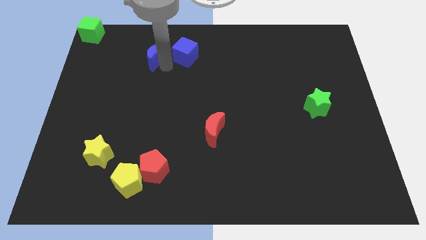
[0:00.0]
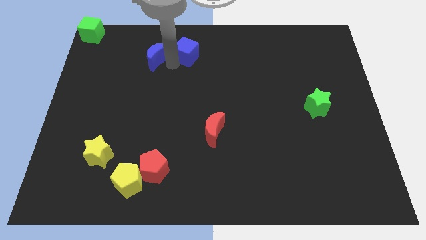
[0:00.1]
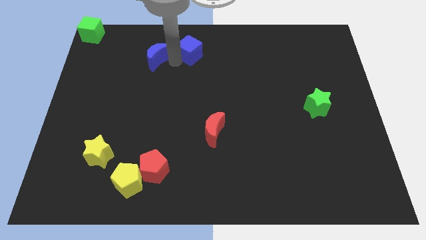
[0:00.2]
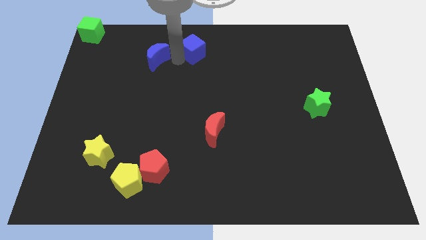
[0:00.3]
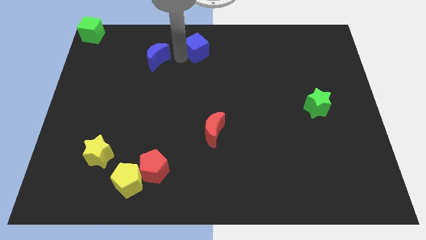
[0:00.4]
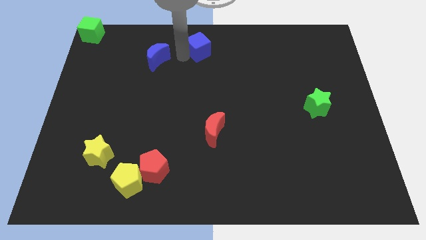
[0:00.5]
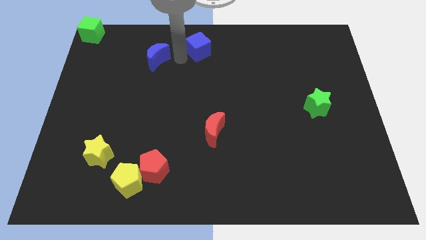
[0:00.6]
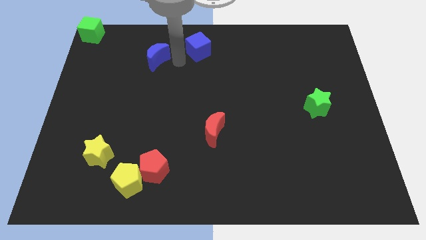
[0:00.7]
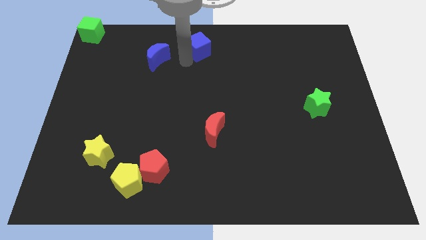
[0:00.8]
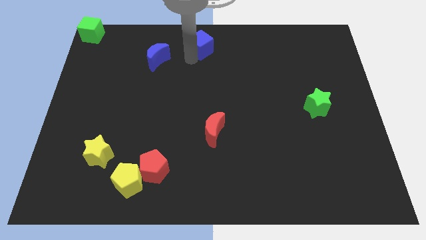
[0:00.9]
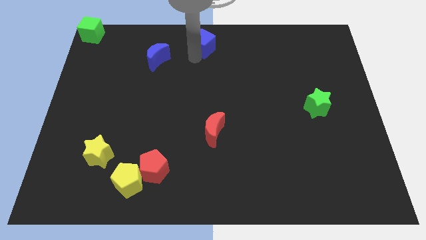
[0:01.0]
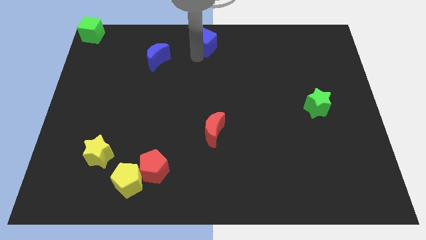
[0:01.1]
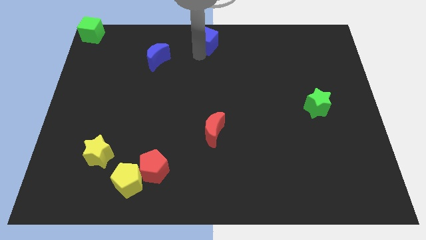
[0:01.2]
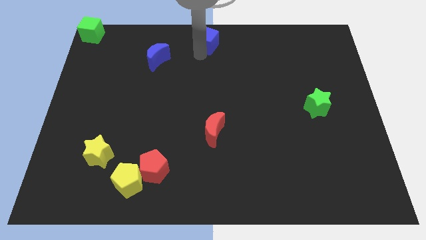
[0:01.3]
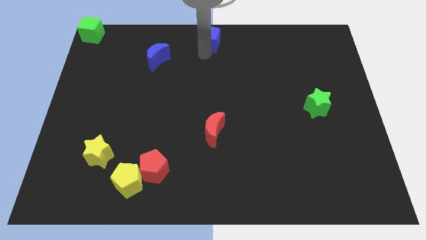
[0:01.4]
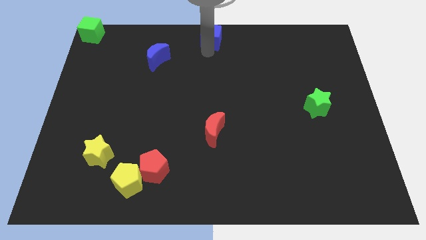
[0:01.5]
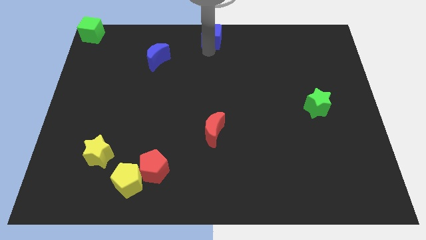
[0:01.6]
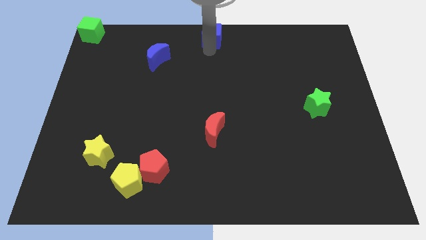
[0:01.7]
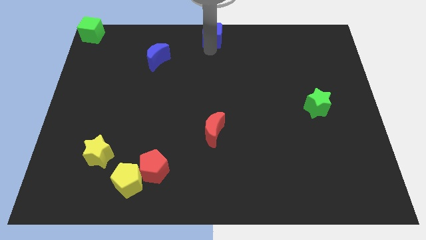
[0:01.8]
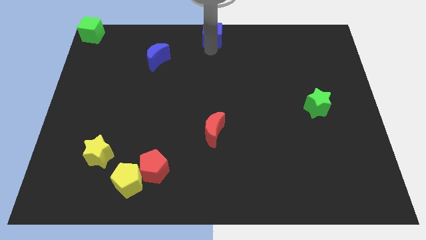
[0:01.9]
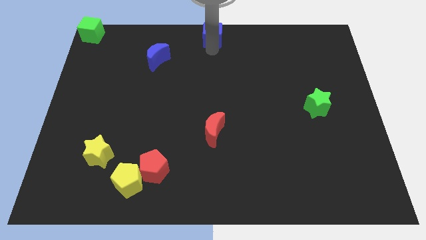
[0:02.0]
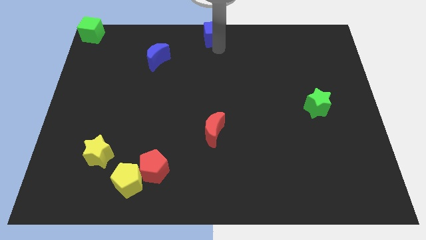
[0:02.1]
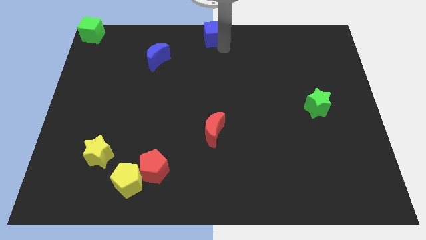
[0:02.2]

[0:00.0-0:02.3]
place the blue cube at top center of the board

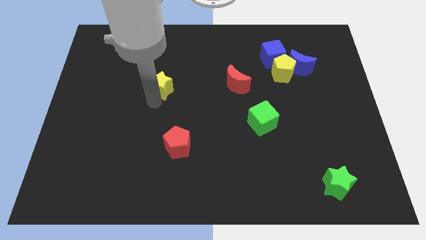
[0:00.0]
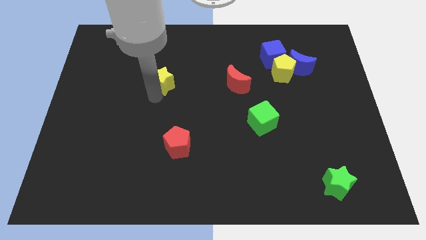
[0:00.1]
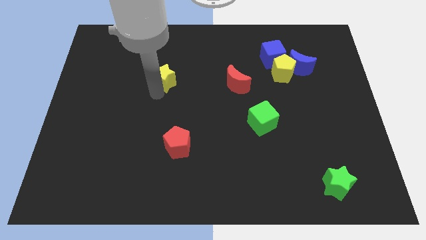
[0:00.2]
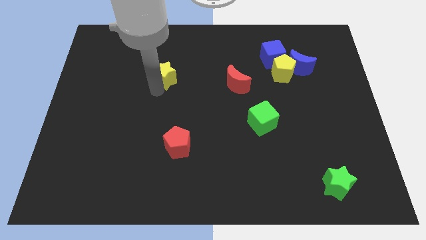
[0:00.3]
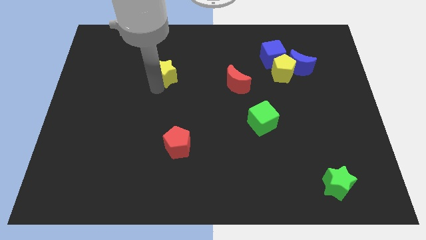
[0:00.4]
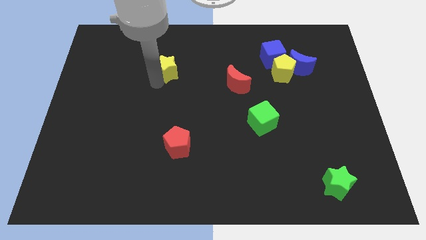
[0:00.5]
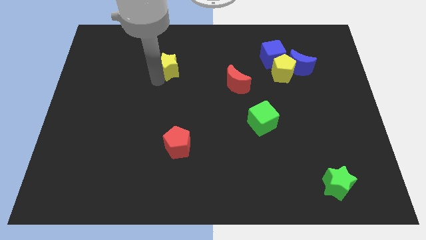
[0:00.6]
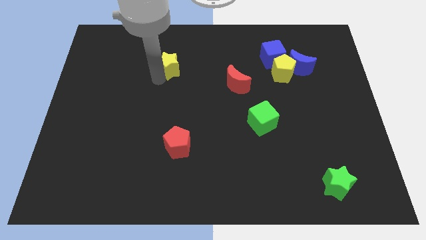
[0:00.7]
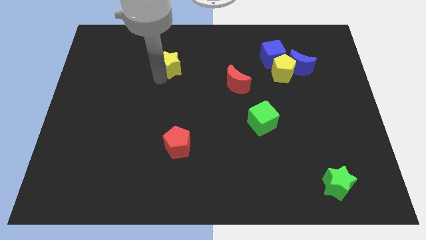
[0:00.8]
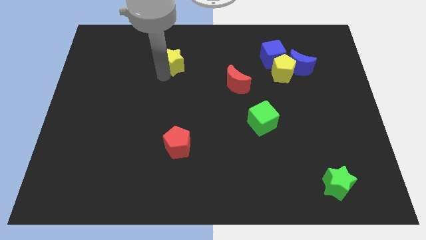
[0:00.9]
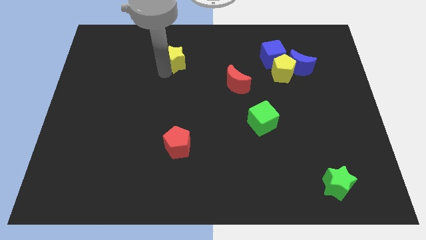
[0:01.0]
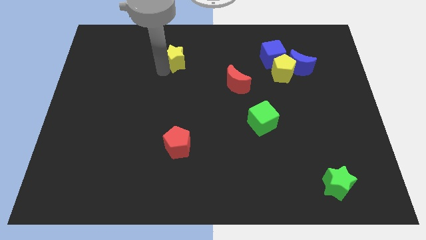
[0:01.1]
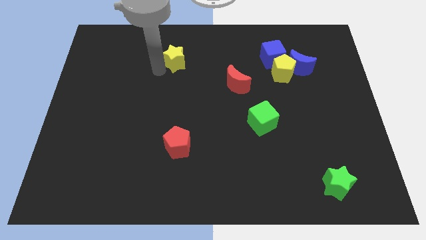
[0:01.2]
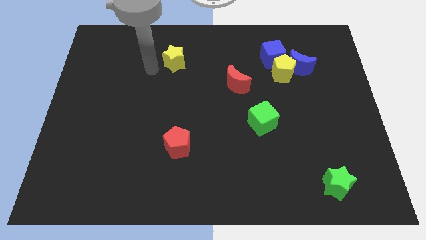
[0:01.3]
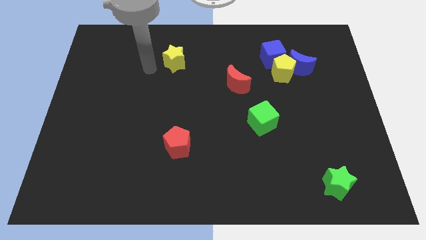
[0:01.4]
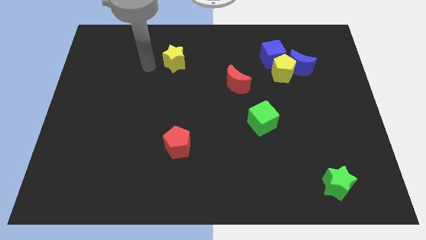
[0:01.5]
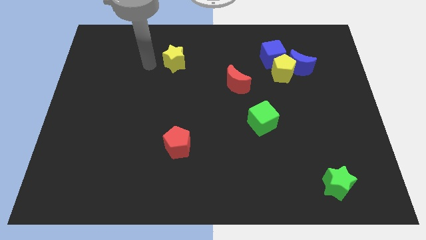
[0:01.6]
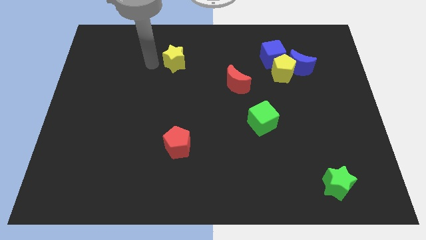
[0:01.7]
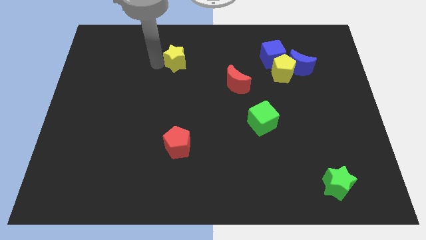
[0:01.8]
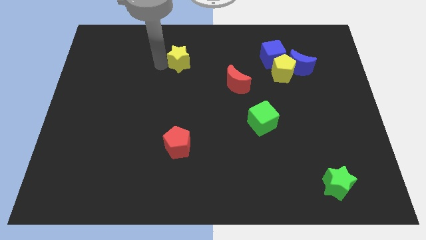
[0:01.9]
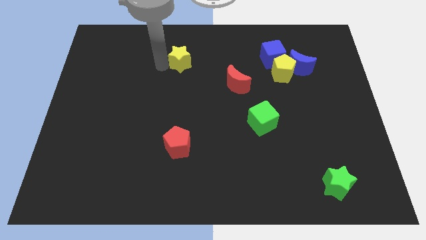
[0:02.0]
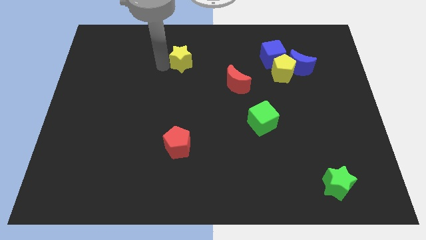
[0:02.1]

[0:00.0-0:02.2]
push the yellow star to the top left of the red crescent

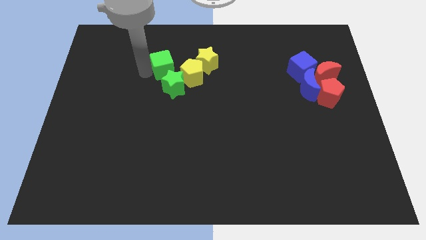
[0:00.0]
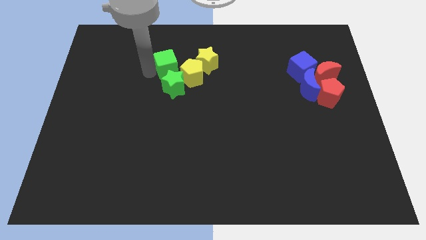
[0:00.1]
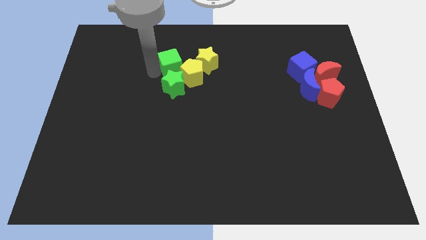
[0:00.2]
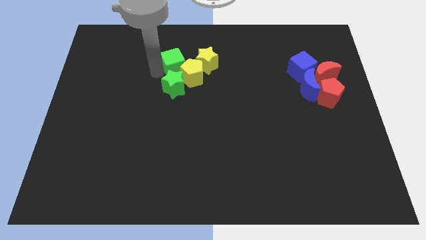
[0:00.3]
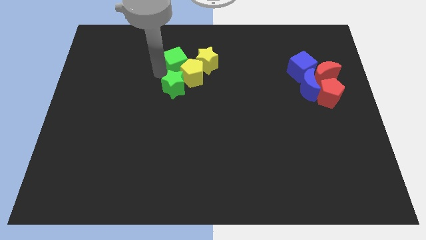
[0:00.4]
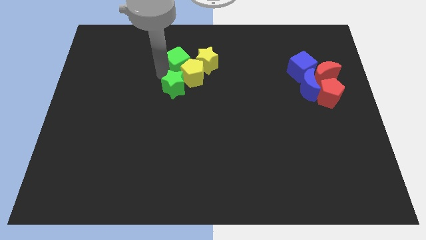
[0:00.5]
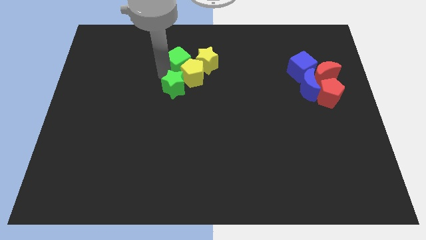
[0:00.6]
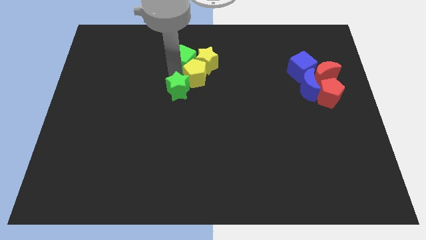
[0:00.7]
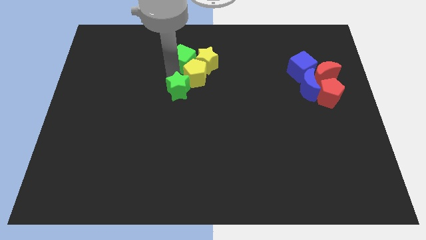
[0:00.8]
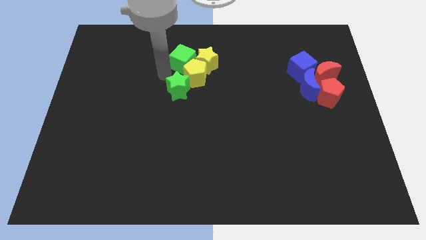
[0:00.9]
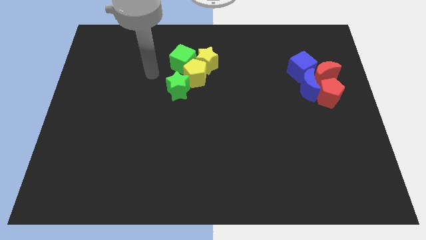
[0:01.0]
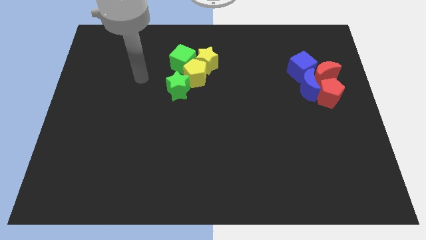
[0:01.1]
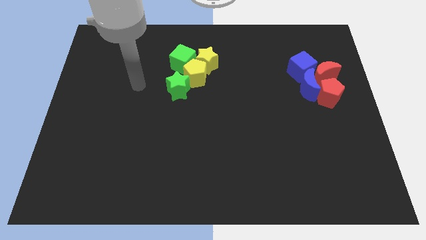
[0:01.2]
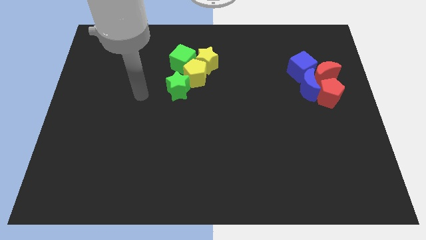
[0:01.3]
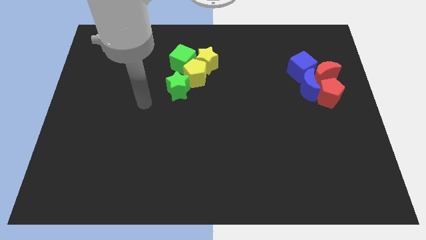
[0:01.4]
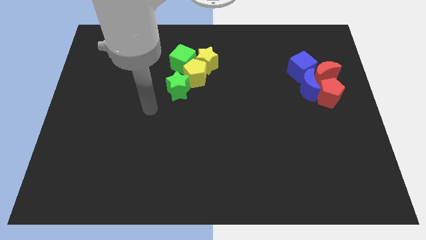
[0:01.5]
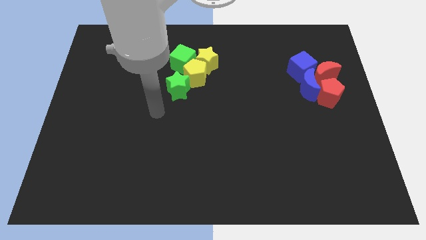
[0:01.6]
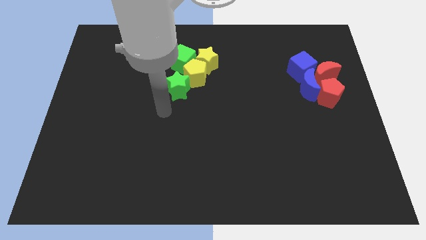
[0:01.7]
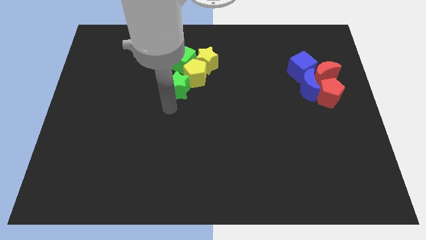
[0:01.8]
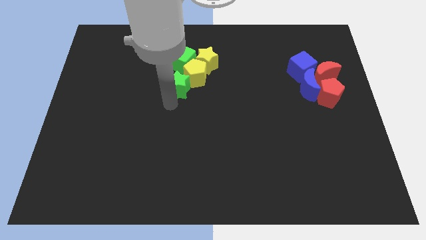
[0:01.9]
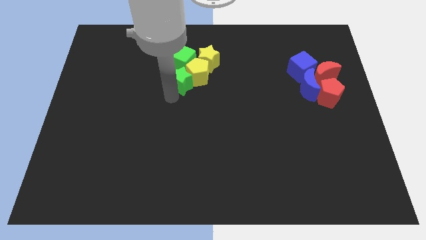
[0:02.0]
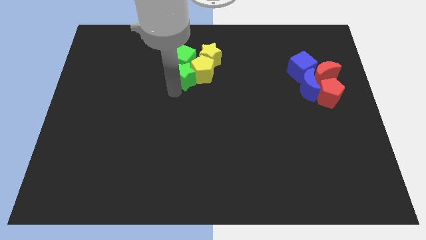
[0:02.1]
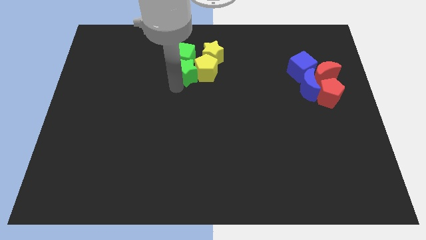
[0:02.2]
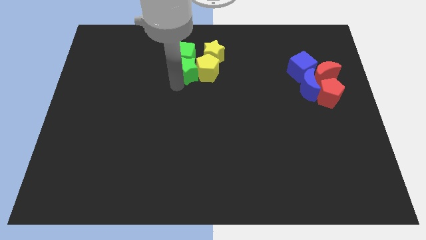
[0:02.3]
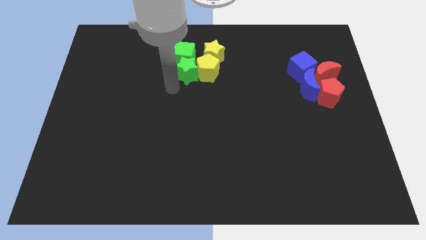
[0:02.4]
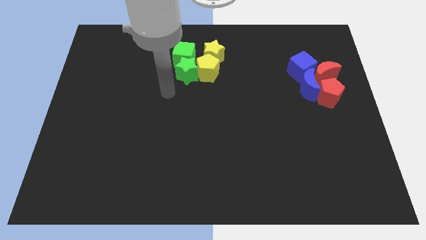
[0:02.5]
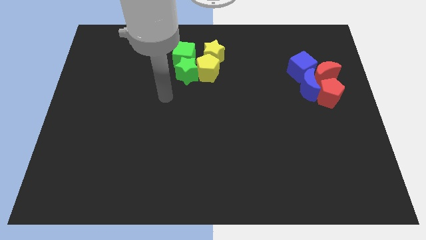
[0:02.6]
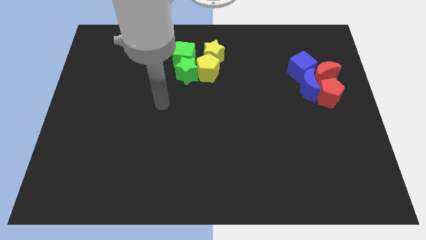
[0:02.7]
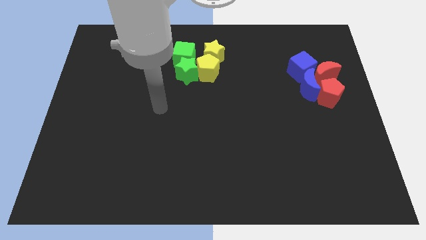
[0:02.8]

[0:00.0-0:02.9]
make the green and yellow blocks together

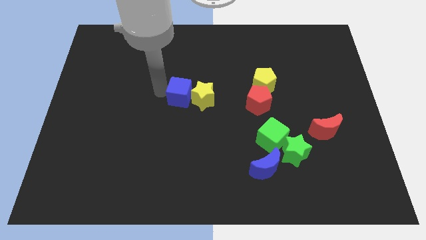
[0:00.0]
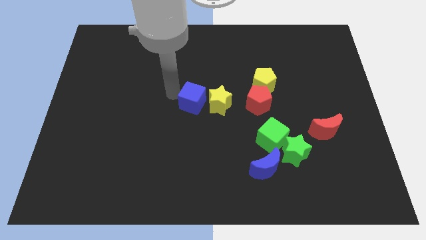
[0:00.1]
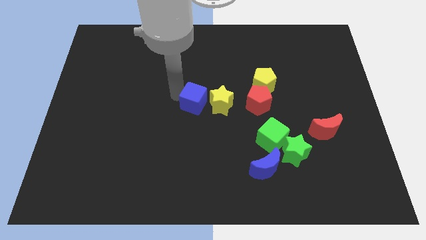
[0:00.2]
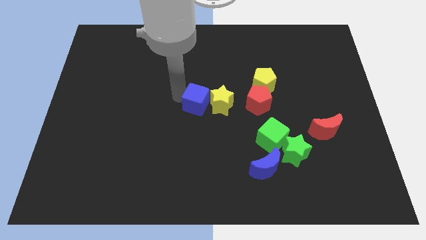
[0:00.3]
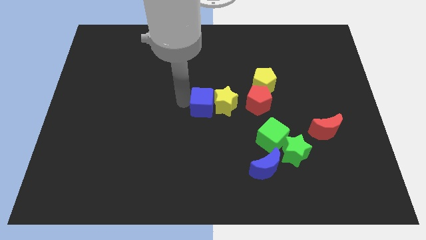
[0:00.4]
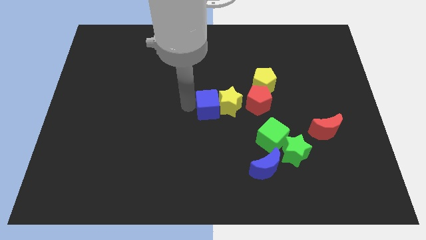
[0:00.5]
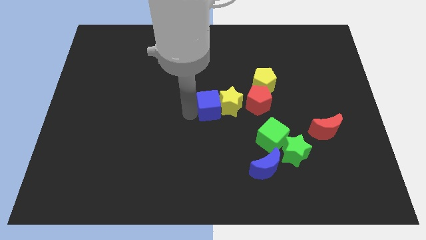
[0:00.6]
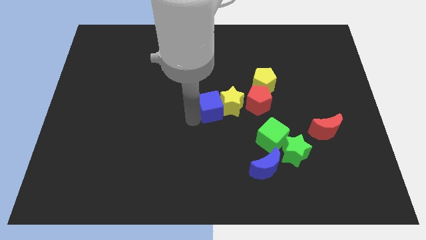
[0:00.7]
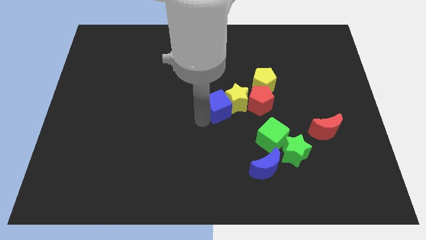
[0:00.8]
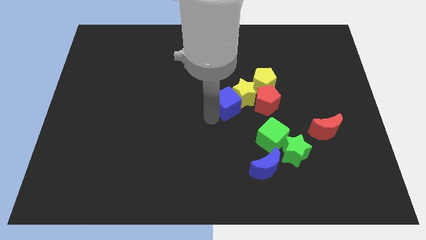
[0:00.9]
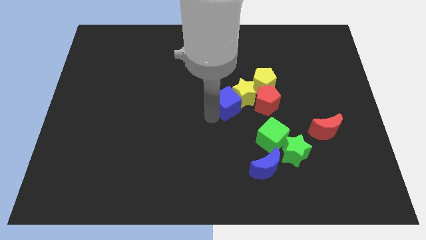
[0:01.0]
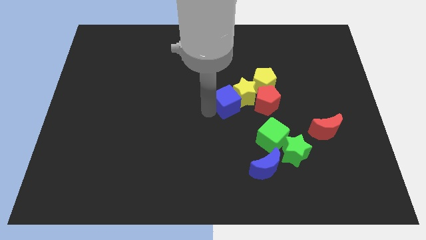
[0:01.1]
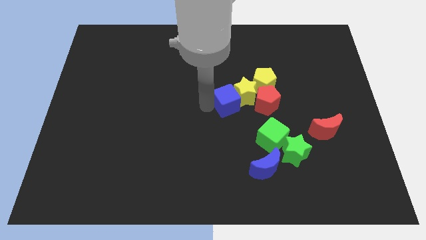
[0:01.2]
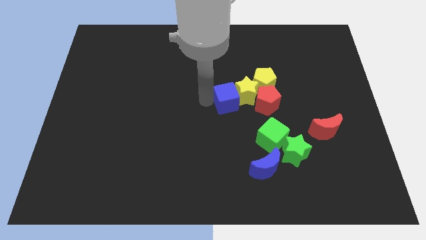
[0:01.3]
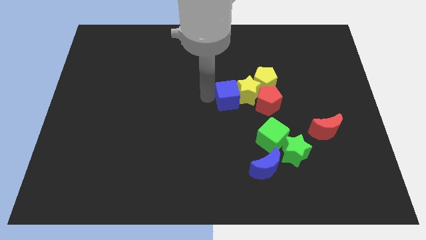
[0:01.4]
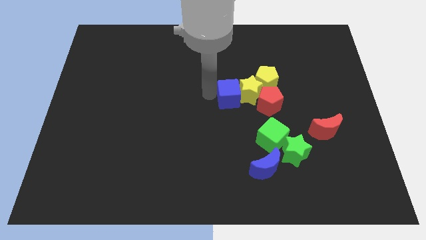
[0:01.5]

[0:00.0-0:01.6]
push the blue cube and yellow star into the red pentagon
